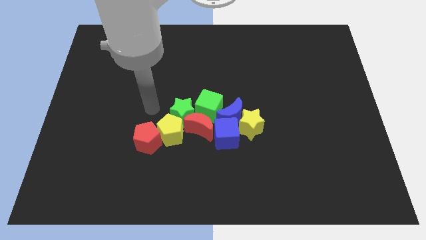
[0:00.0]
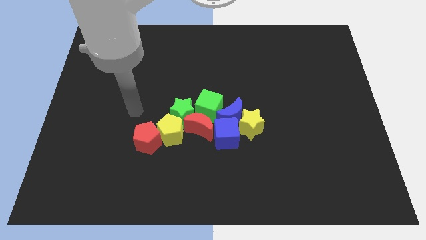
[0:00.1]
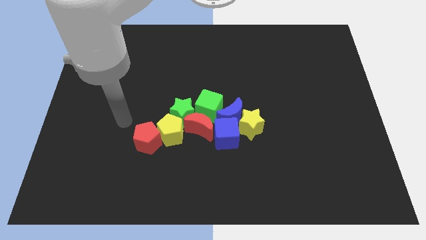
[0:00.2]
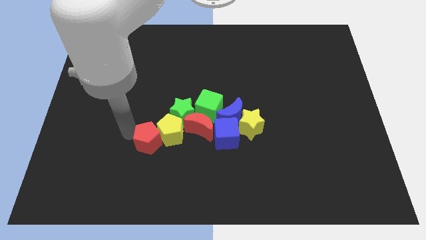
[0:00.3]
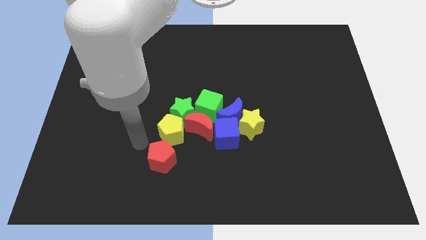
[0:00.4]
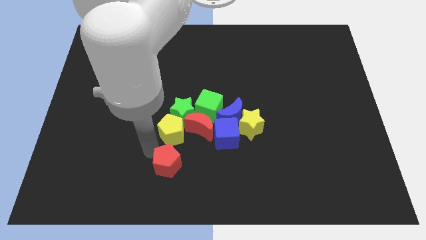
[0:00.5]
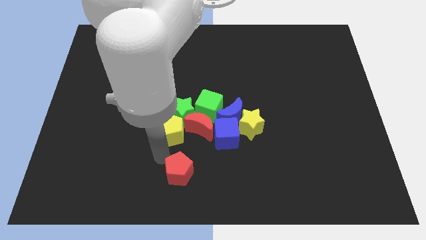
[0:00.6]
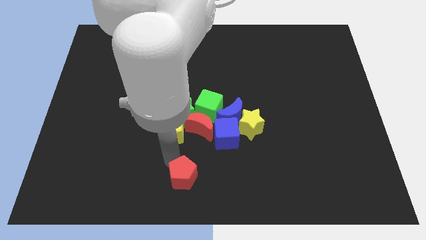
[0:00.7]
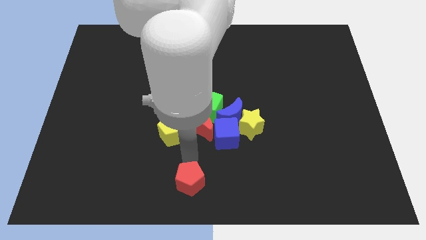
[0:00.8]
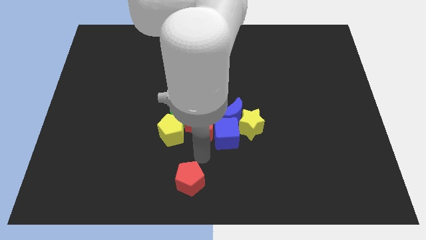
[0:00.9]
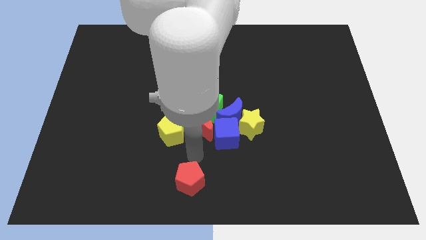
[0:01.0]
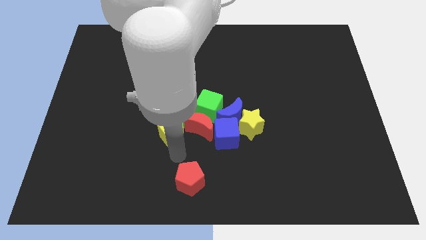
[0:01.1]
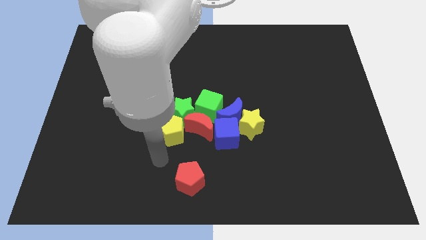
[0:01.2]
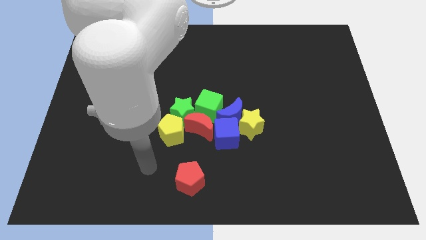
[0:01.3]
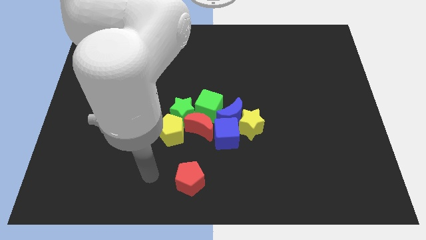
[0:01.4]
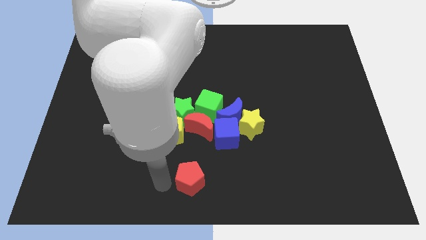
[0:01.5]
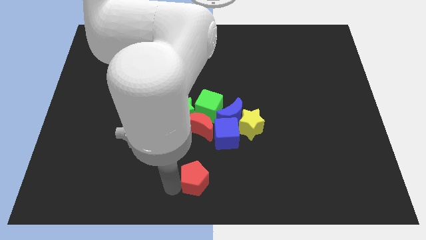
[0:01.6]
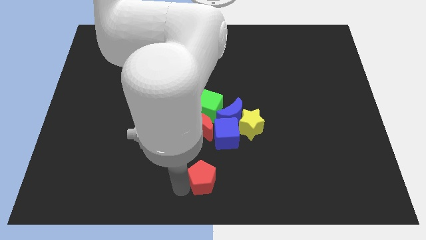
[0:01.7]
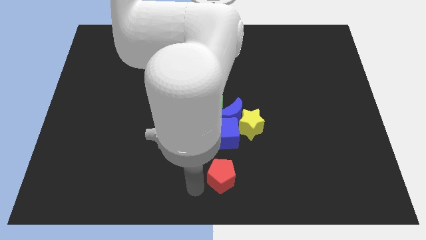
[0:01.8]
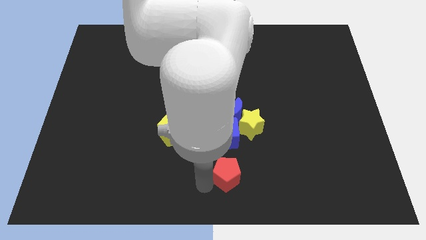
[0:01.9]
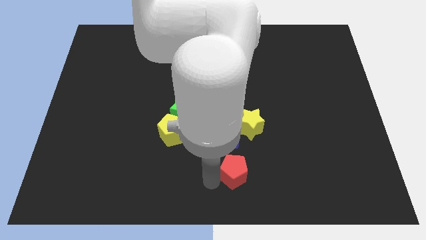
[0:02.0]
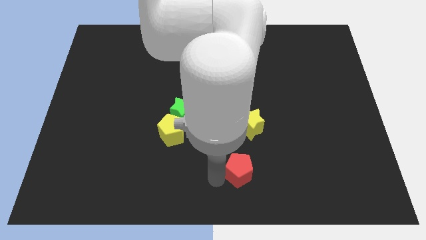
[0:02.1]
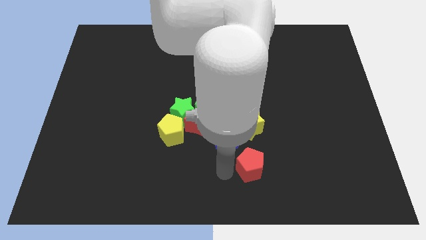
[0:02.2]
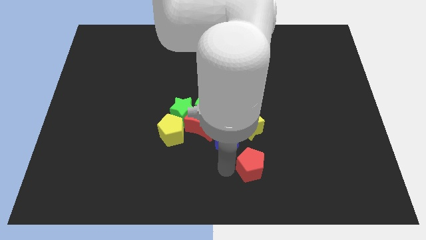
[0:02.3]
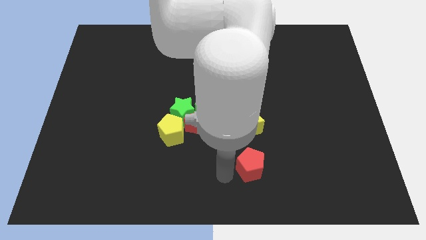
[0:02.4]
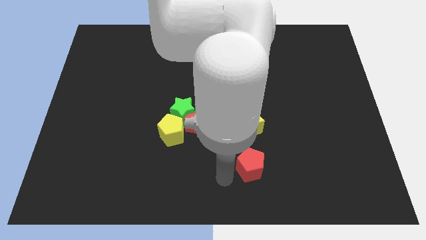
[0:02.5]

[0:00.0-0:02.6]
place the red pentagon vertically below the yellow star

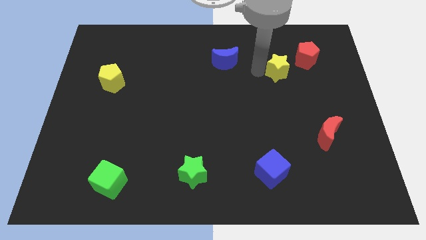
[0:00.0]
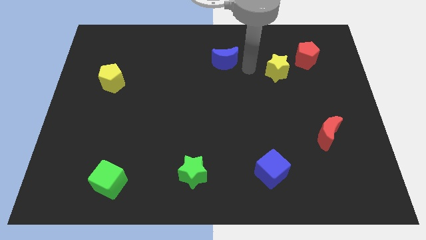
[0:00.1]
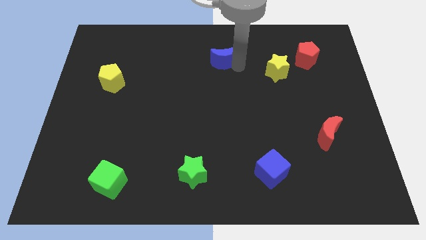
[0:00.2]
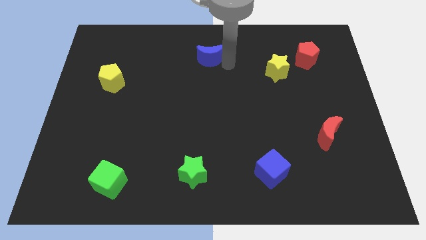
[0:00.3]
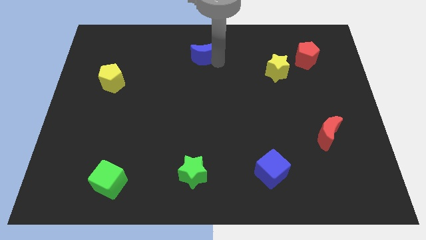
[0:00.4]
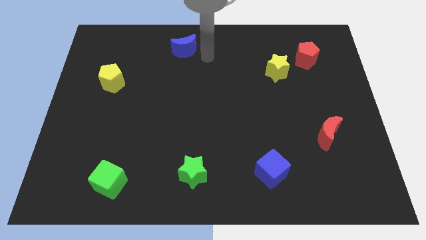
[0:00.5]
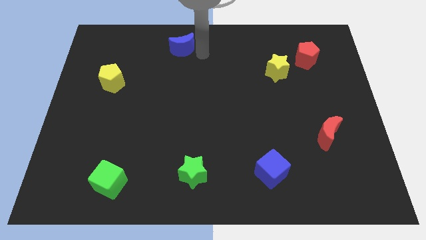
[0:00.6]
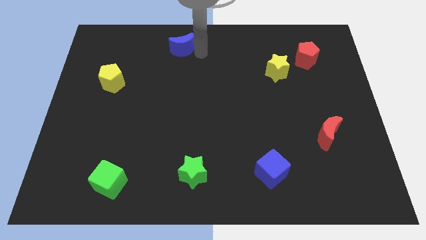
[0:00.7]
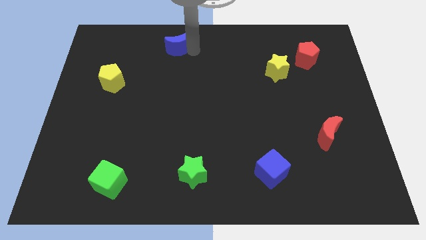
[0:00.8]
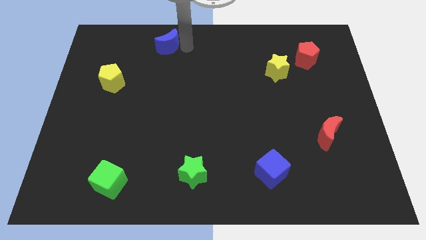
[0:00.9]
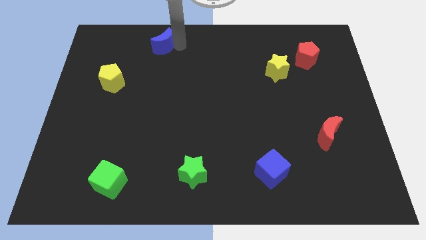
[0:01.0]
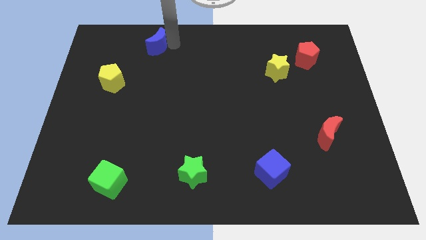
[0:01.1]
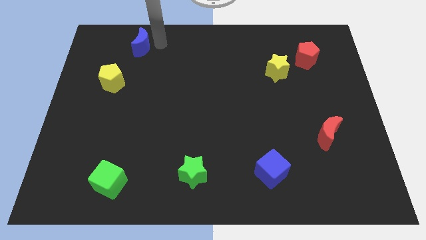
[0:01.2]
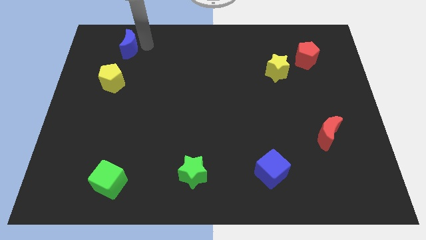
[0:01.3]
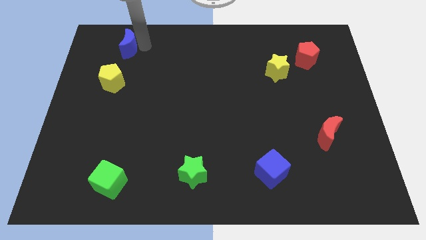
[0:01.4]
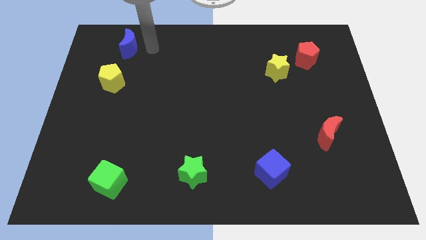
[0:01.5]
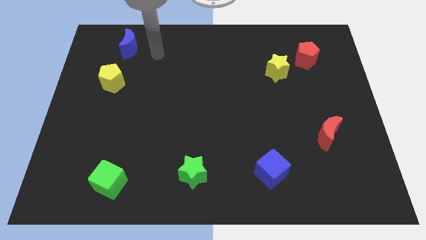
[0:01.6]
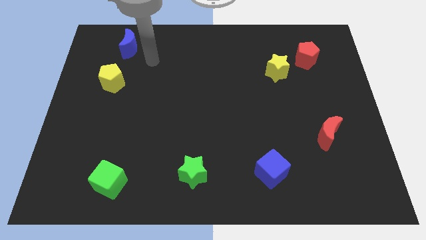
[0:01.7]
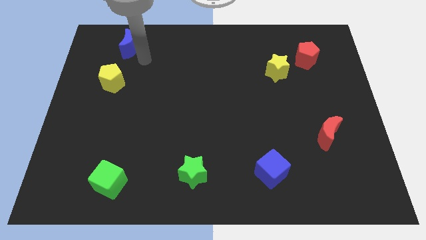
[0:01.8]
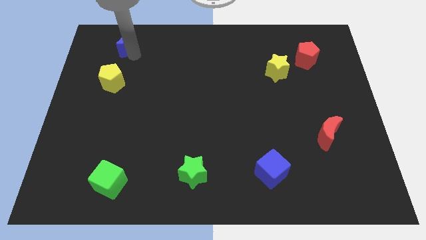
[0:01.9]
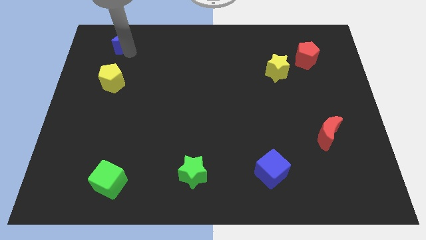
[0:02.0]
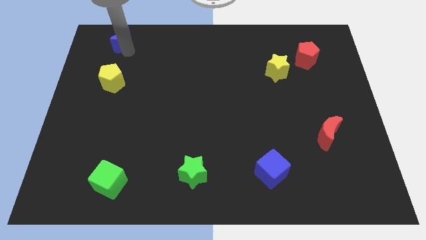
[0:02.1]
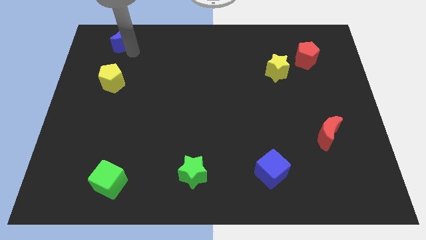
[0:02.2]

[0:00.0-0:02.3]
place the blue moon above the yellow pentagon

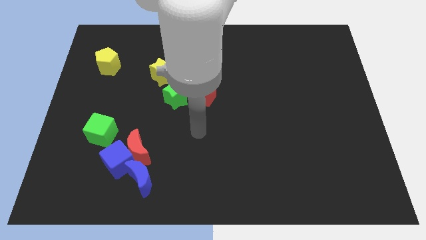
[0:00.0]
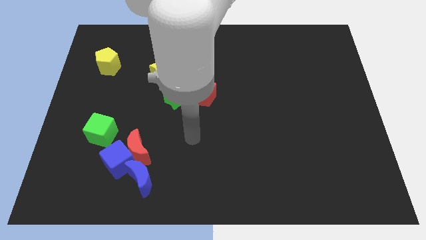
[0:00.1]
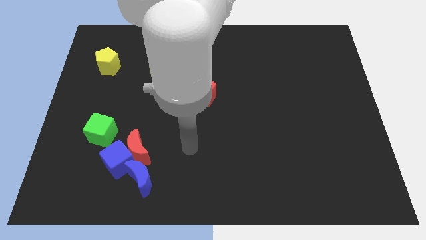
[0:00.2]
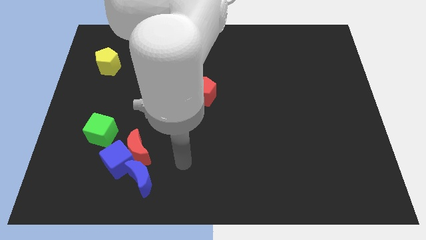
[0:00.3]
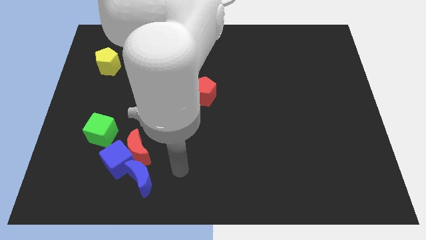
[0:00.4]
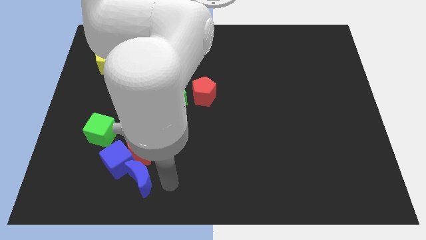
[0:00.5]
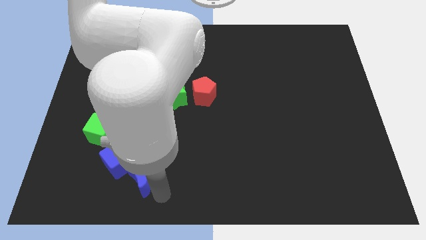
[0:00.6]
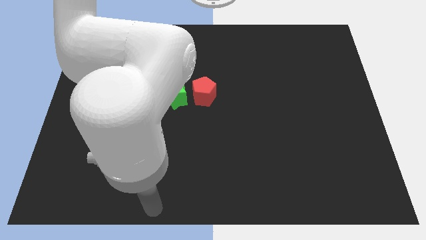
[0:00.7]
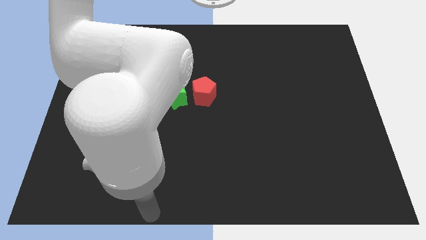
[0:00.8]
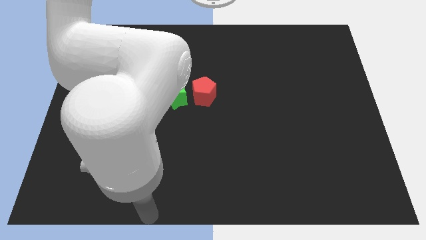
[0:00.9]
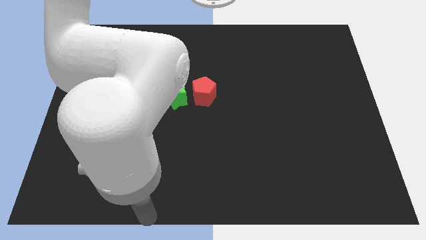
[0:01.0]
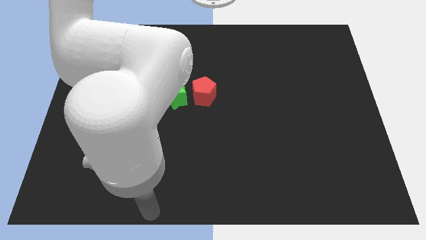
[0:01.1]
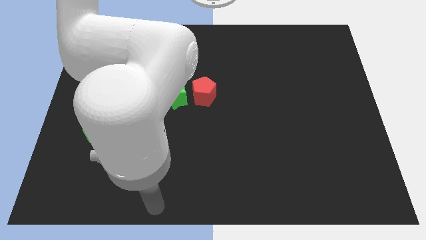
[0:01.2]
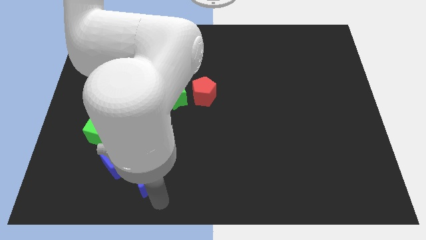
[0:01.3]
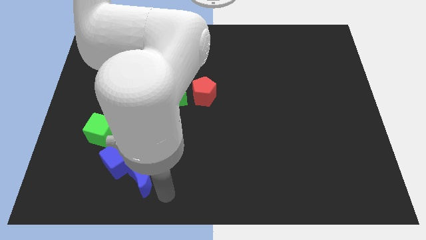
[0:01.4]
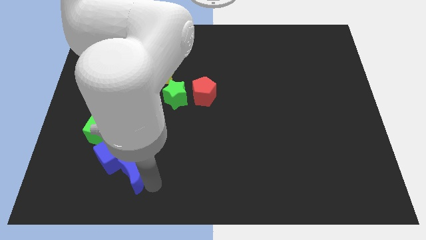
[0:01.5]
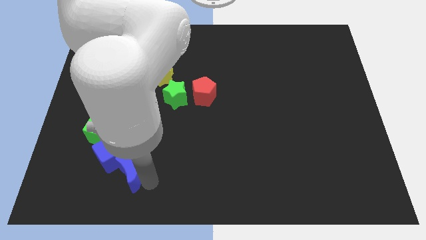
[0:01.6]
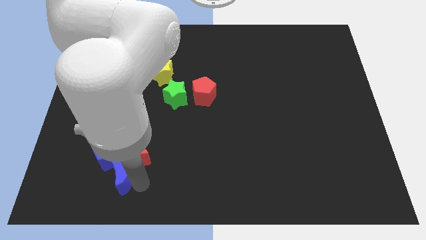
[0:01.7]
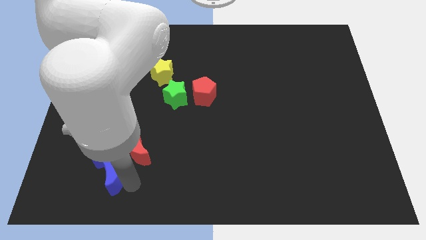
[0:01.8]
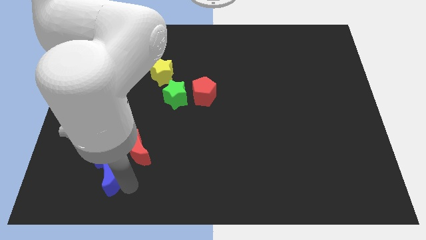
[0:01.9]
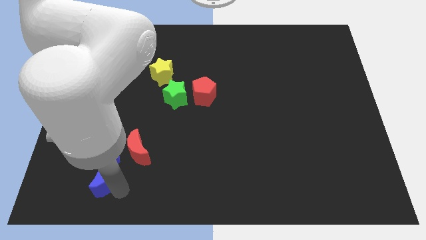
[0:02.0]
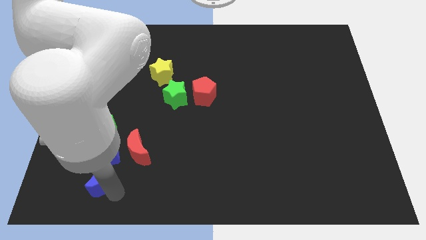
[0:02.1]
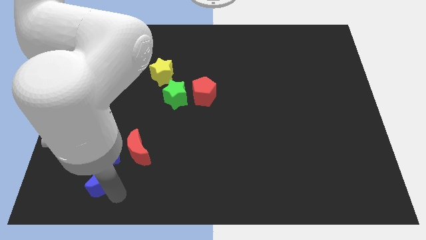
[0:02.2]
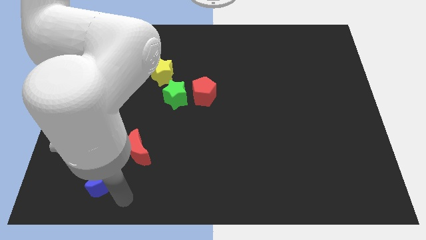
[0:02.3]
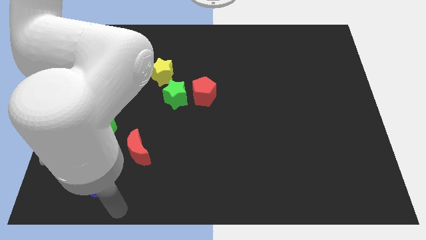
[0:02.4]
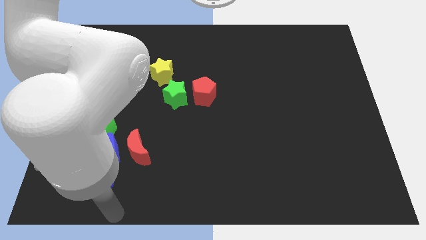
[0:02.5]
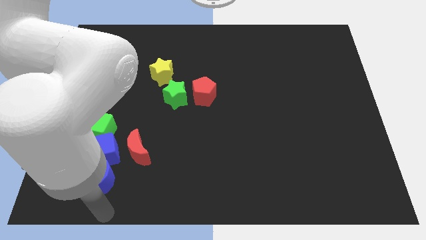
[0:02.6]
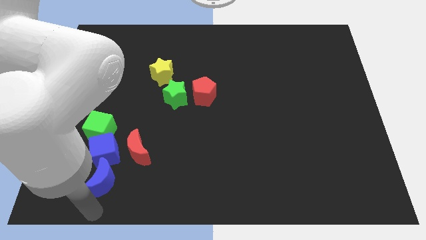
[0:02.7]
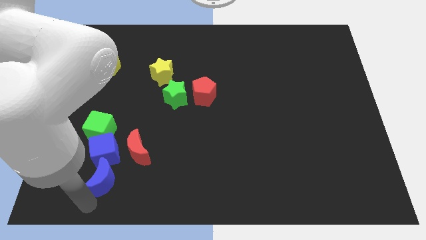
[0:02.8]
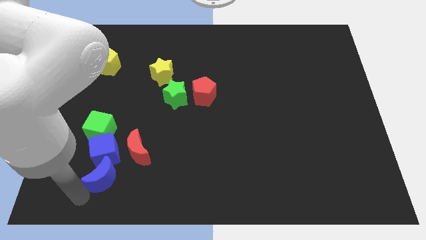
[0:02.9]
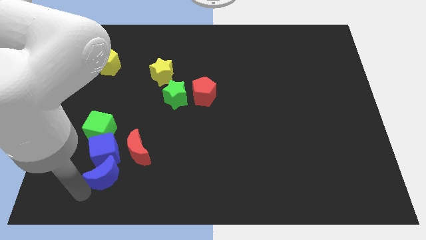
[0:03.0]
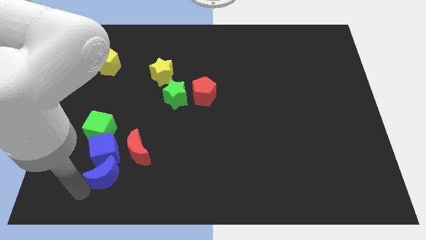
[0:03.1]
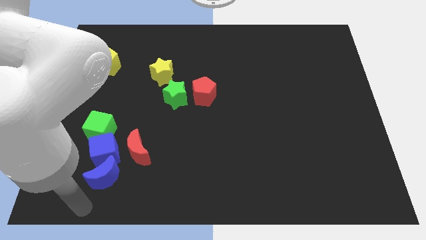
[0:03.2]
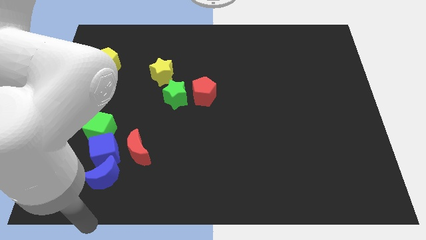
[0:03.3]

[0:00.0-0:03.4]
move the blue crescent to the bottom of the blue cube

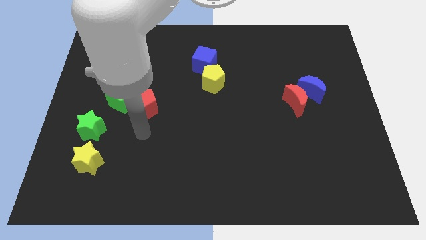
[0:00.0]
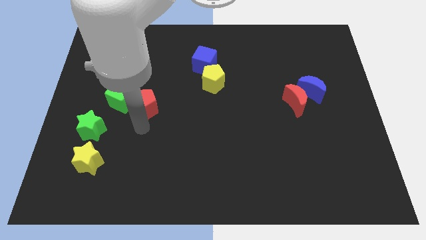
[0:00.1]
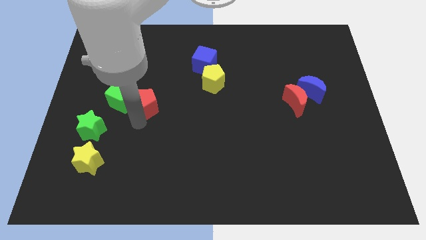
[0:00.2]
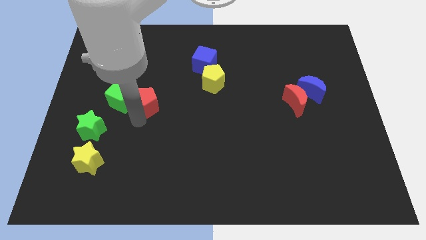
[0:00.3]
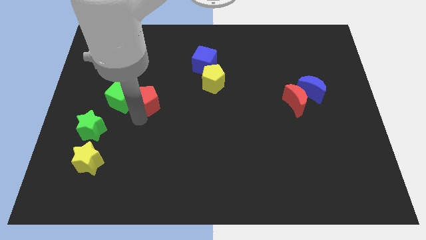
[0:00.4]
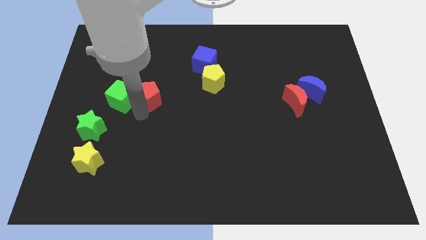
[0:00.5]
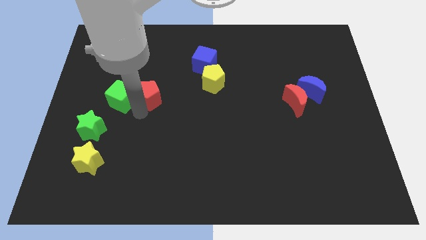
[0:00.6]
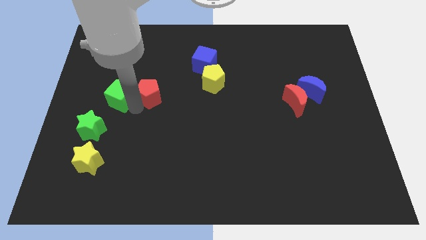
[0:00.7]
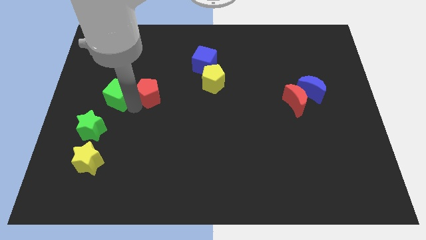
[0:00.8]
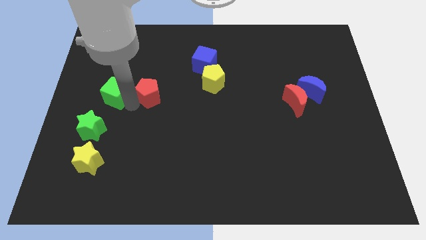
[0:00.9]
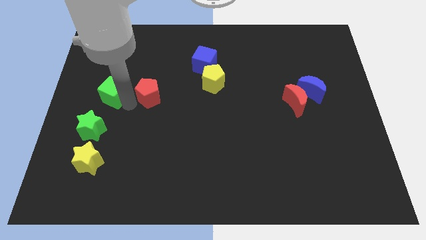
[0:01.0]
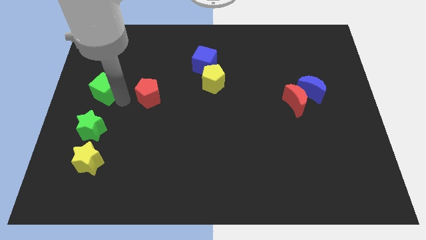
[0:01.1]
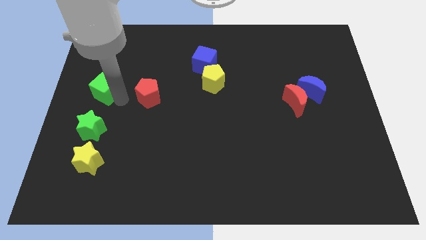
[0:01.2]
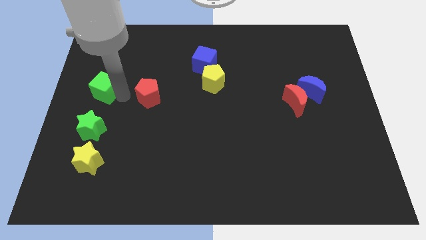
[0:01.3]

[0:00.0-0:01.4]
separate the green cube from the red pentagon
